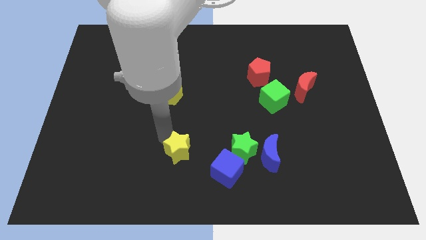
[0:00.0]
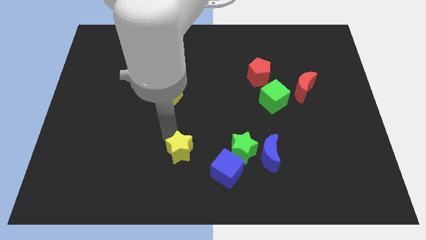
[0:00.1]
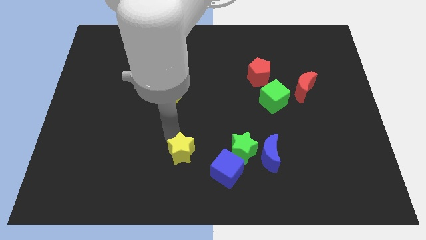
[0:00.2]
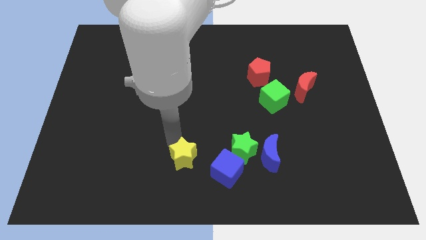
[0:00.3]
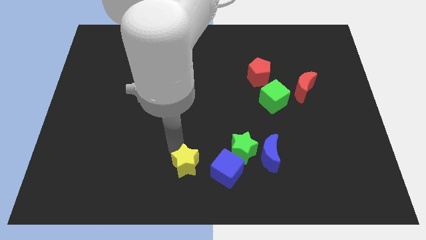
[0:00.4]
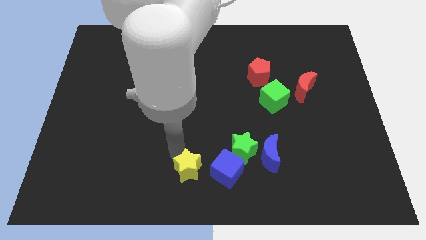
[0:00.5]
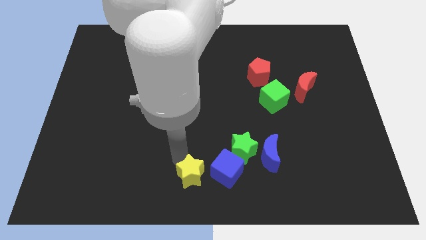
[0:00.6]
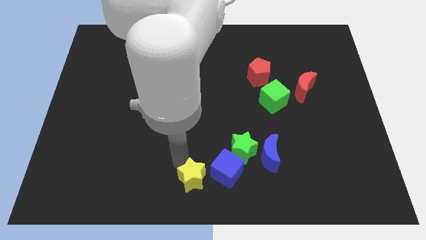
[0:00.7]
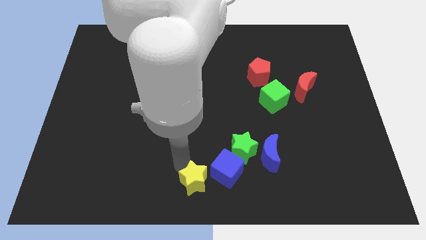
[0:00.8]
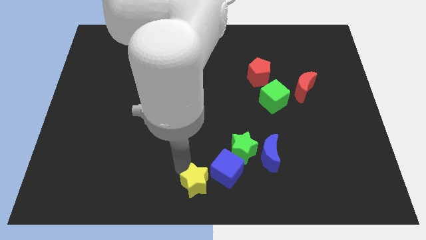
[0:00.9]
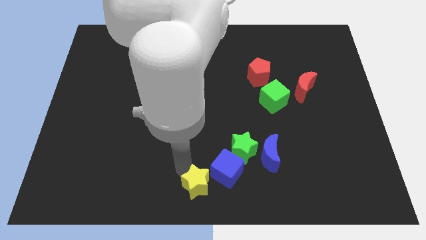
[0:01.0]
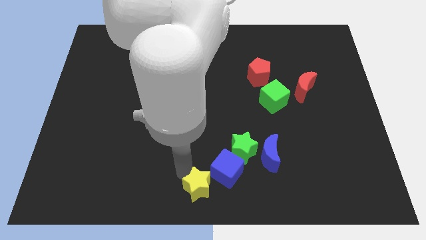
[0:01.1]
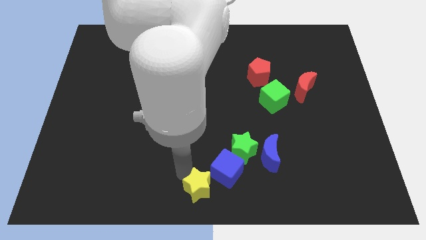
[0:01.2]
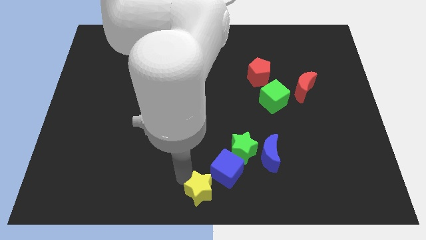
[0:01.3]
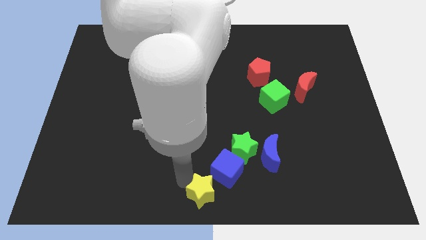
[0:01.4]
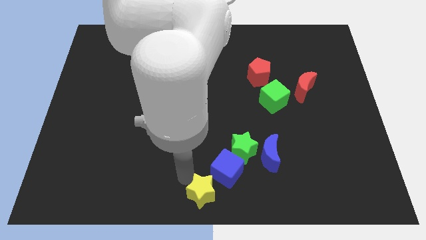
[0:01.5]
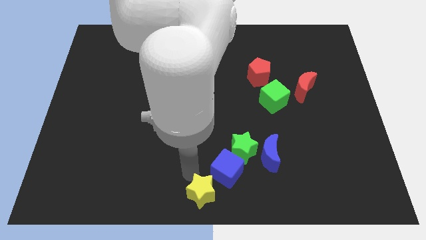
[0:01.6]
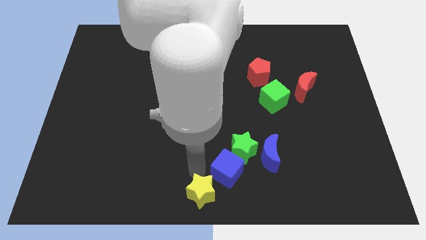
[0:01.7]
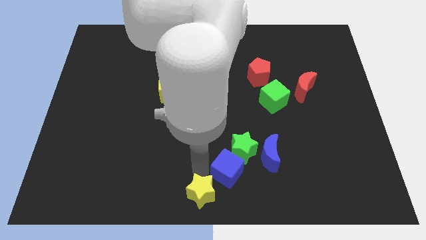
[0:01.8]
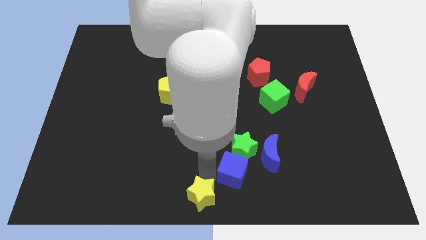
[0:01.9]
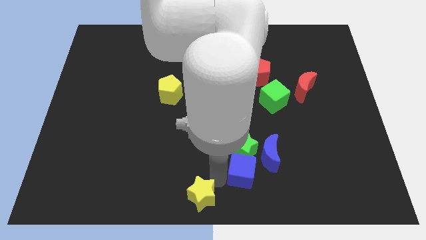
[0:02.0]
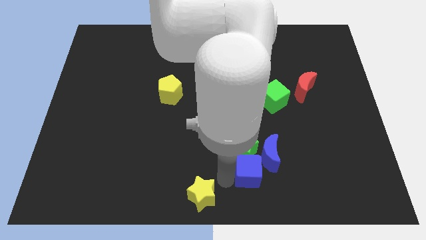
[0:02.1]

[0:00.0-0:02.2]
push the yellow star to the bottom center of the board

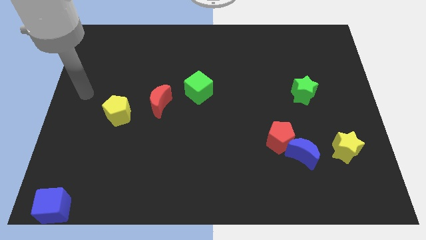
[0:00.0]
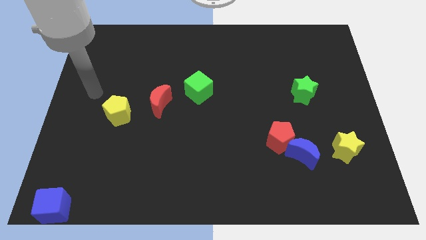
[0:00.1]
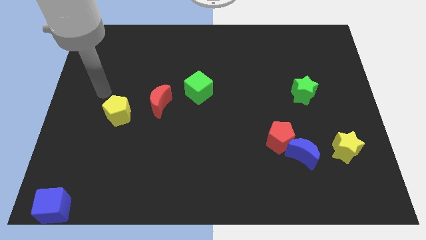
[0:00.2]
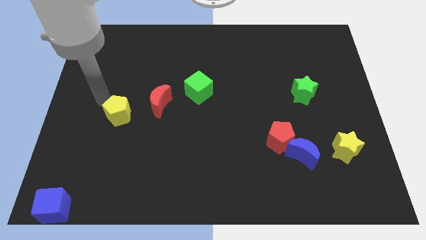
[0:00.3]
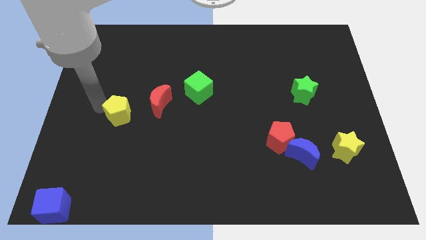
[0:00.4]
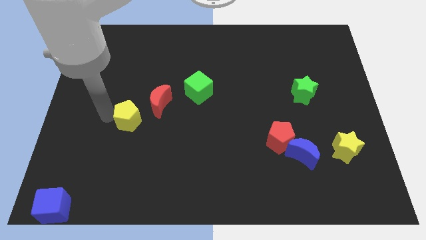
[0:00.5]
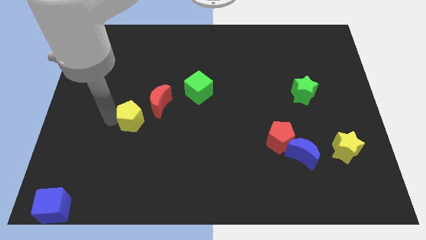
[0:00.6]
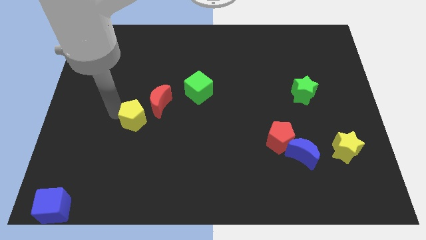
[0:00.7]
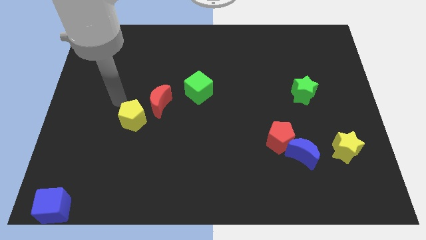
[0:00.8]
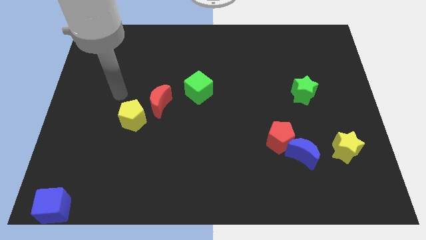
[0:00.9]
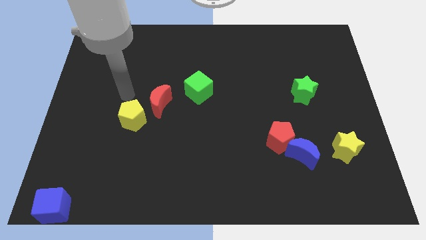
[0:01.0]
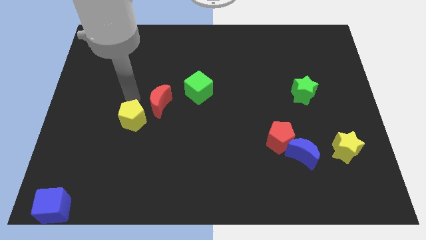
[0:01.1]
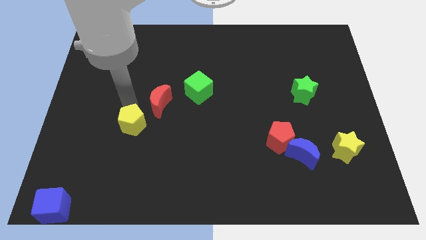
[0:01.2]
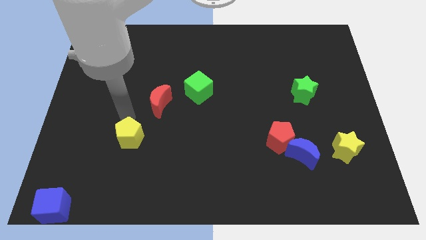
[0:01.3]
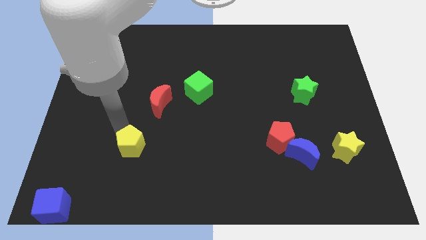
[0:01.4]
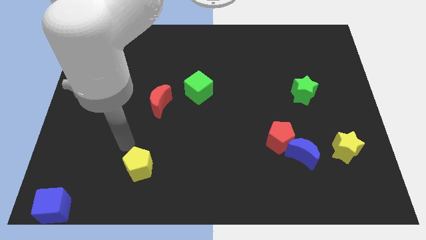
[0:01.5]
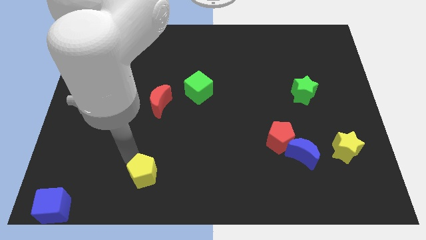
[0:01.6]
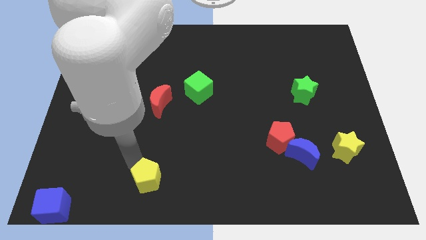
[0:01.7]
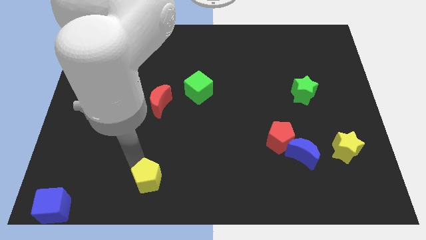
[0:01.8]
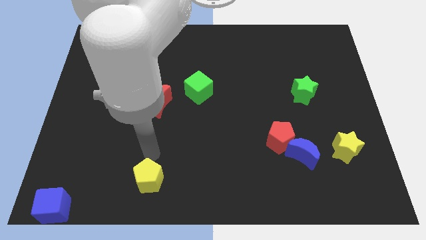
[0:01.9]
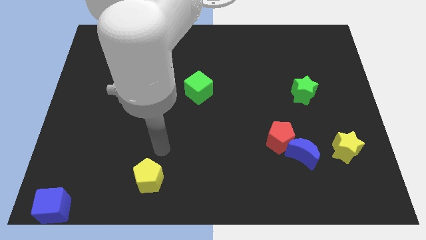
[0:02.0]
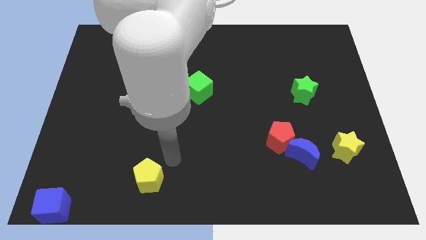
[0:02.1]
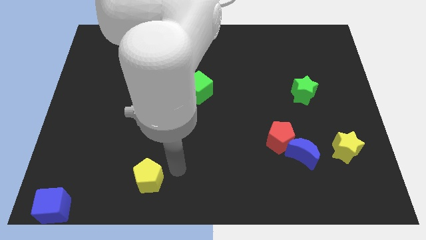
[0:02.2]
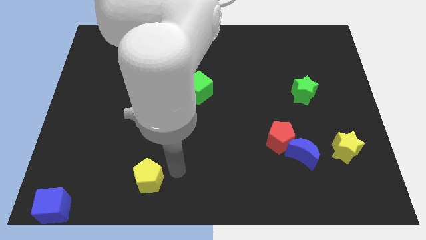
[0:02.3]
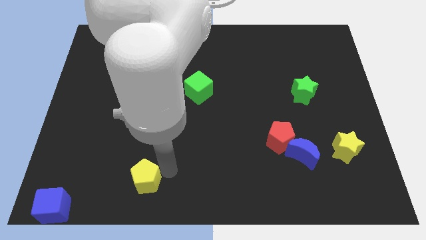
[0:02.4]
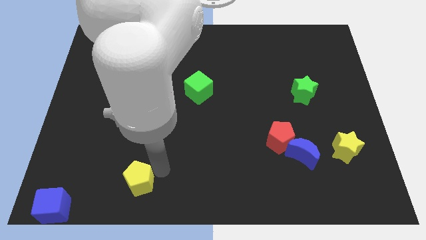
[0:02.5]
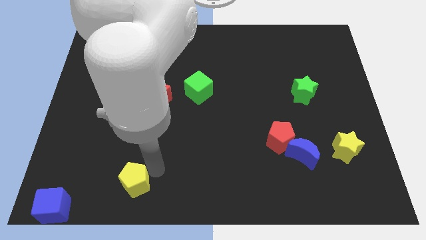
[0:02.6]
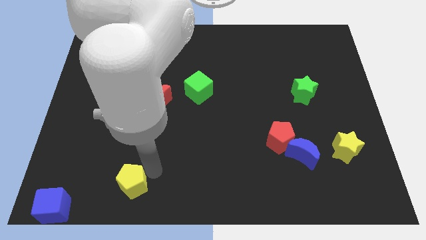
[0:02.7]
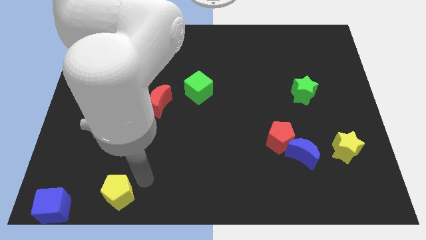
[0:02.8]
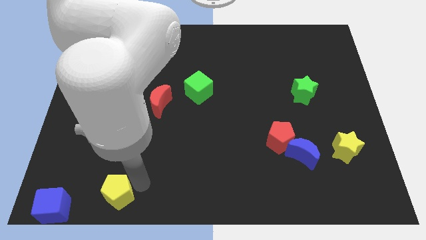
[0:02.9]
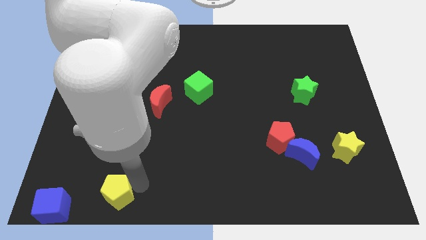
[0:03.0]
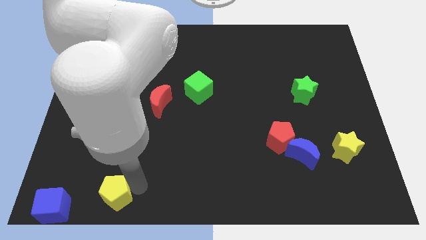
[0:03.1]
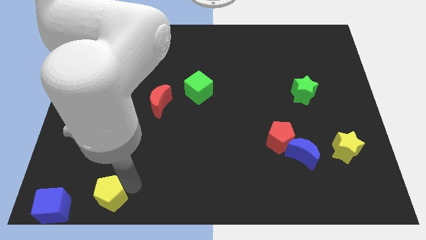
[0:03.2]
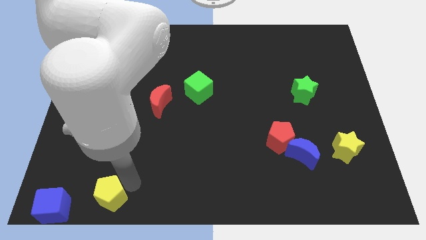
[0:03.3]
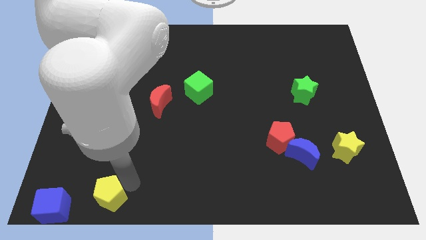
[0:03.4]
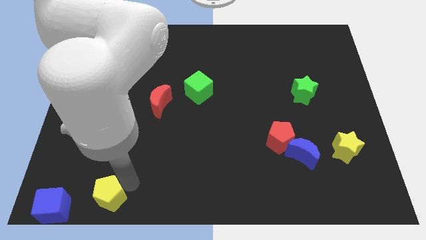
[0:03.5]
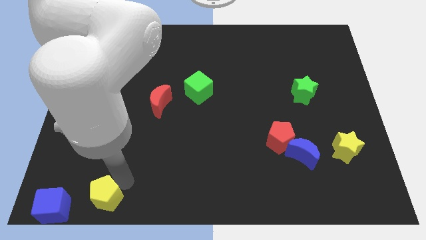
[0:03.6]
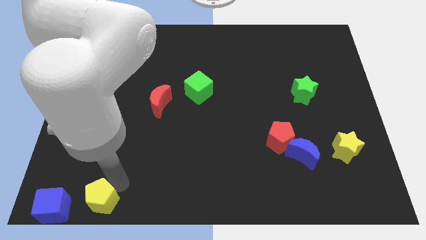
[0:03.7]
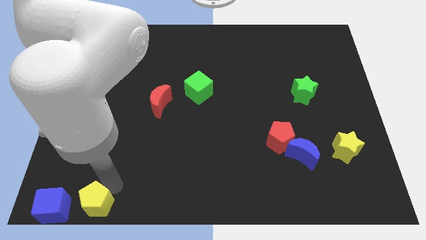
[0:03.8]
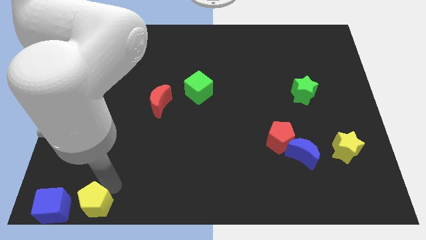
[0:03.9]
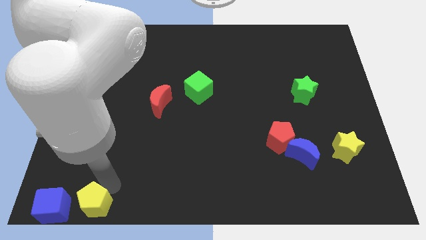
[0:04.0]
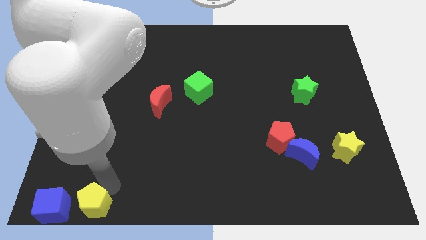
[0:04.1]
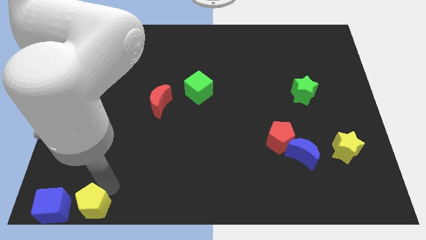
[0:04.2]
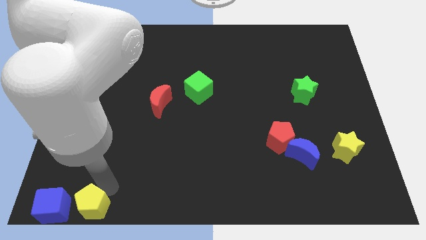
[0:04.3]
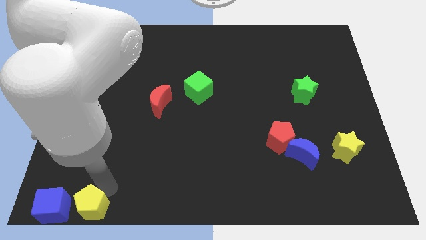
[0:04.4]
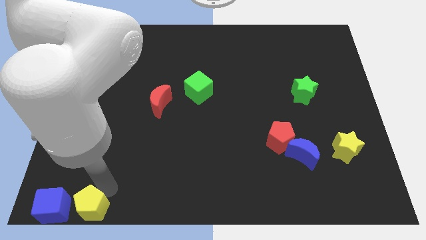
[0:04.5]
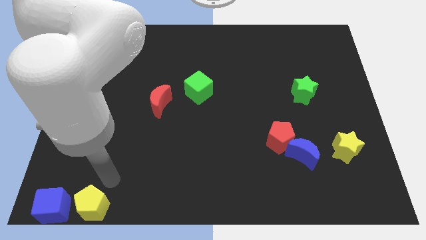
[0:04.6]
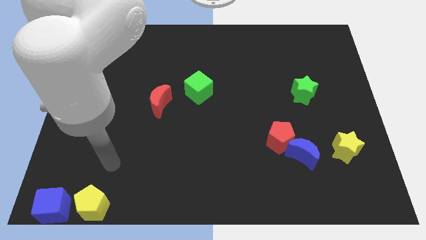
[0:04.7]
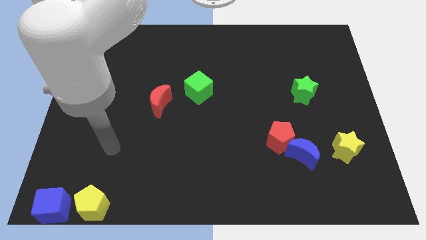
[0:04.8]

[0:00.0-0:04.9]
move the yellow pentagon to the right side of the blue cube

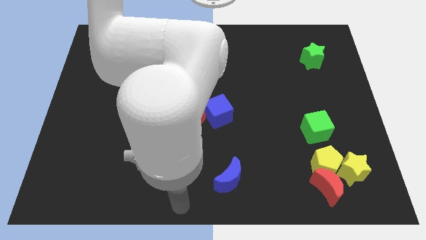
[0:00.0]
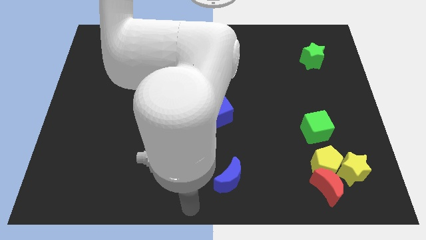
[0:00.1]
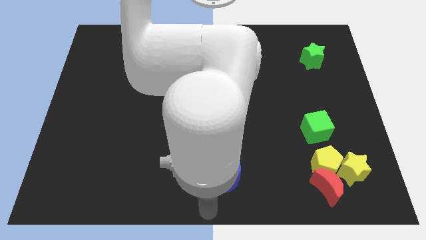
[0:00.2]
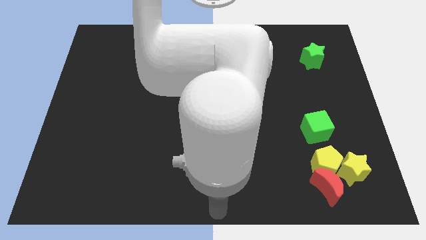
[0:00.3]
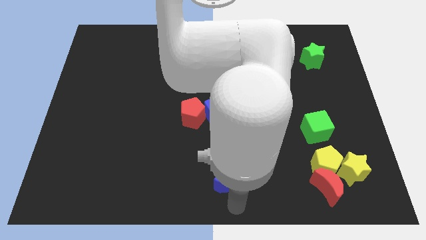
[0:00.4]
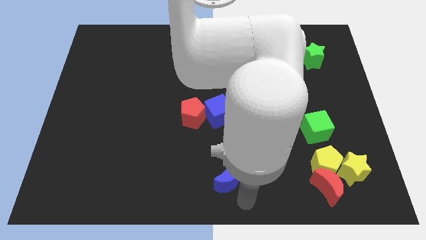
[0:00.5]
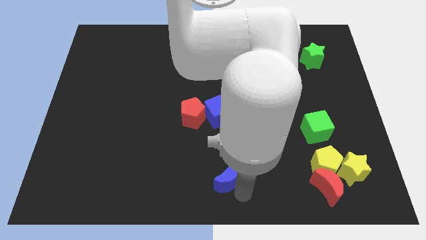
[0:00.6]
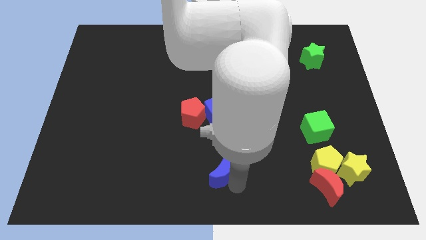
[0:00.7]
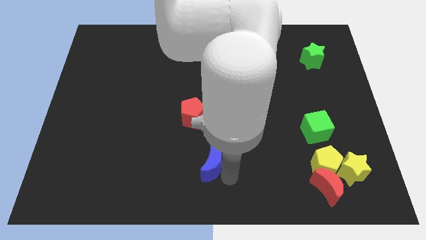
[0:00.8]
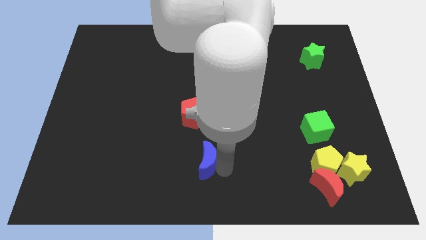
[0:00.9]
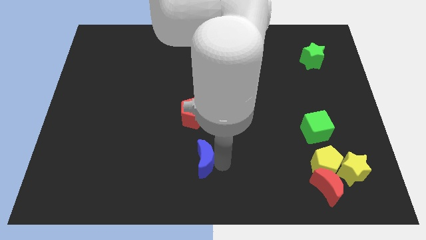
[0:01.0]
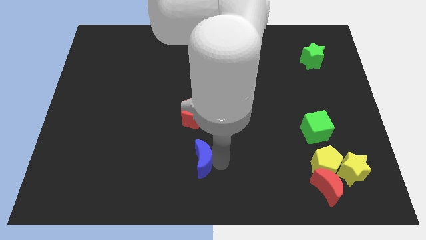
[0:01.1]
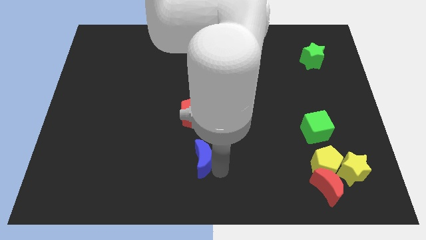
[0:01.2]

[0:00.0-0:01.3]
place blue moon to the bottom of the red pentagon

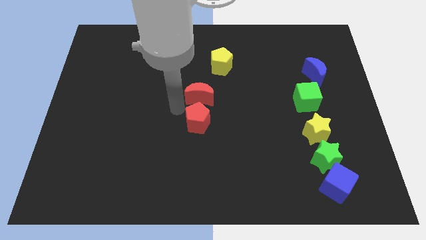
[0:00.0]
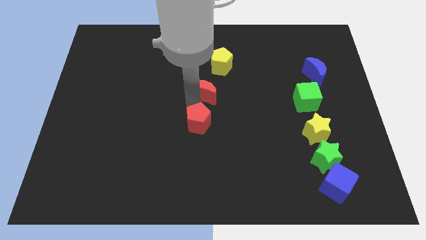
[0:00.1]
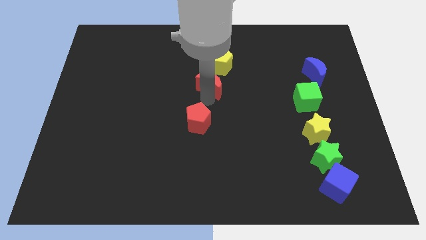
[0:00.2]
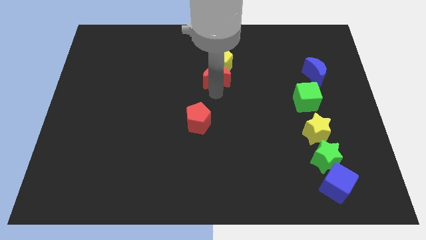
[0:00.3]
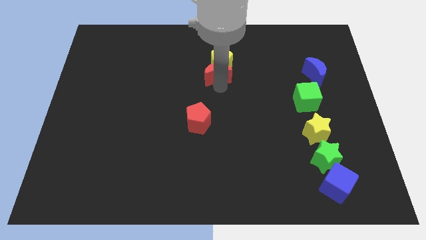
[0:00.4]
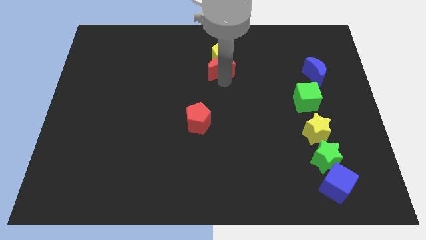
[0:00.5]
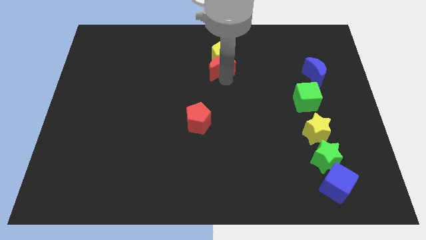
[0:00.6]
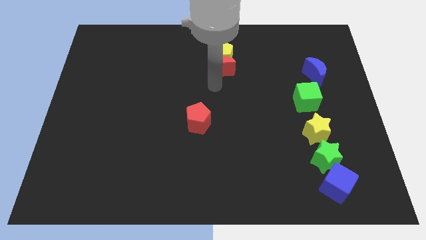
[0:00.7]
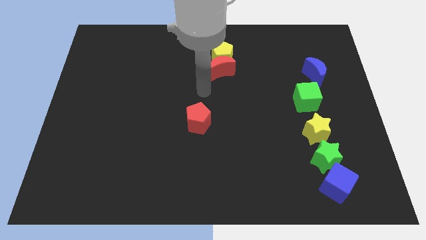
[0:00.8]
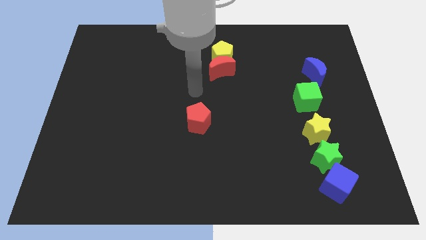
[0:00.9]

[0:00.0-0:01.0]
move red moon into yellow pentagon
